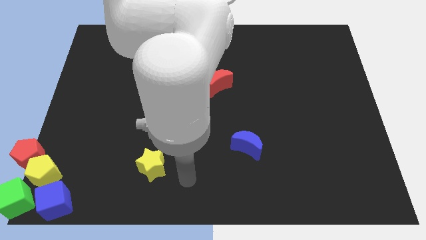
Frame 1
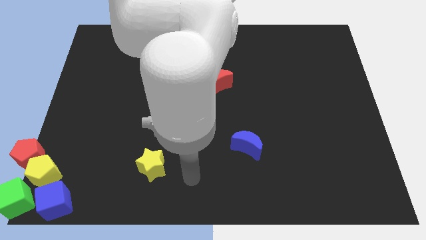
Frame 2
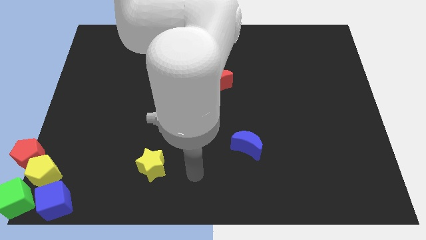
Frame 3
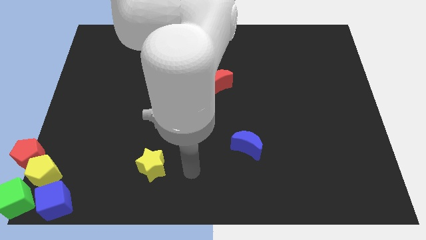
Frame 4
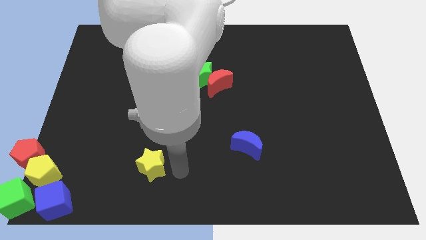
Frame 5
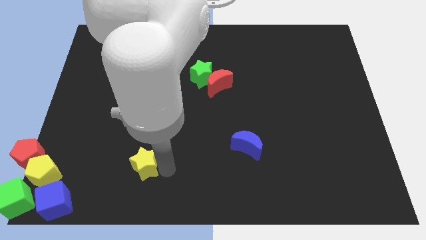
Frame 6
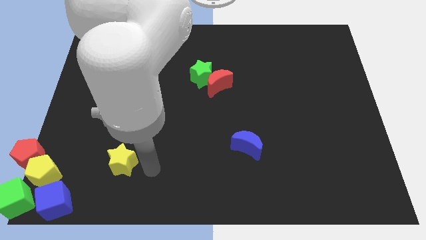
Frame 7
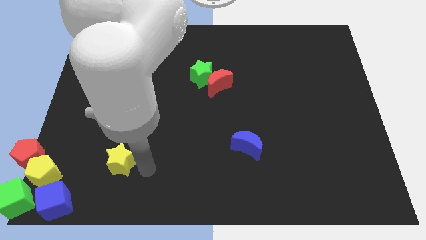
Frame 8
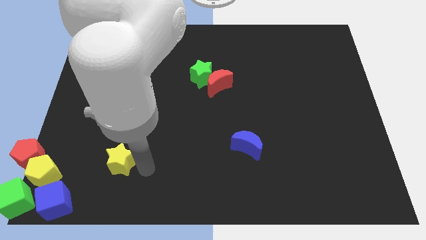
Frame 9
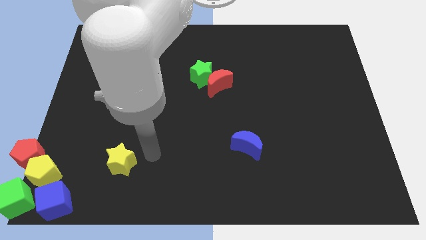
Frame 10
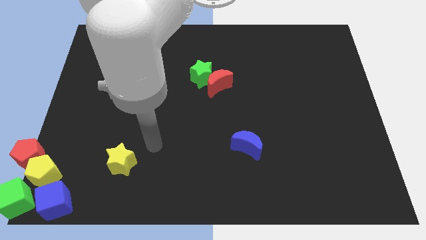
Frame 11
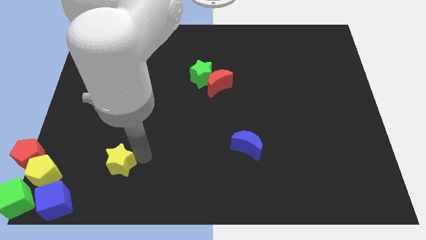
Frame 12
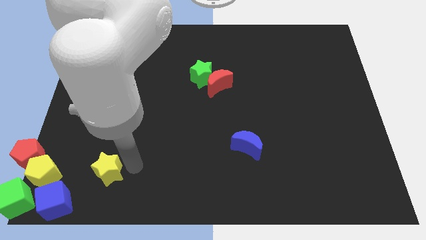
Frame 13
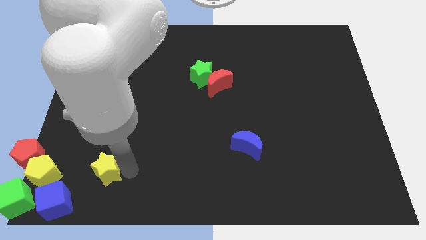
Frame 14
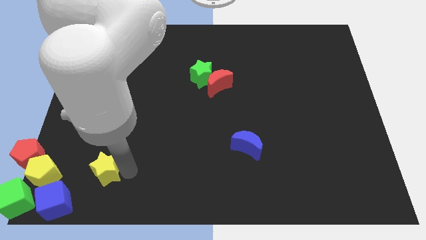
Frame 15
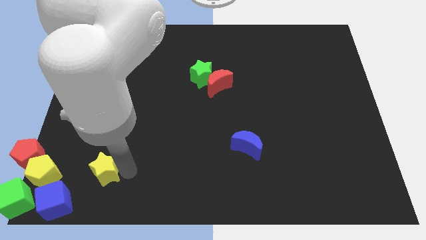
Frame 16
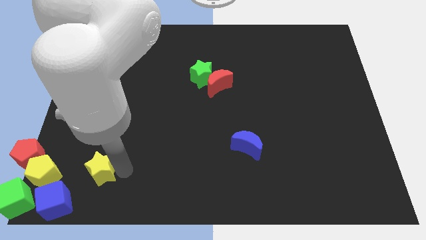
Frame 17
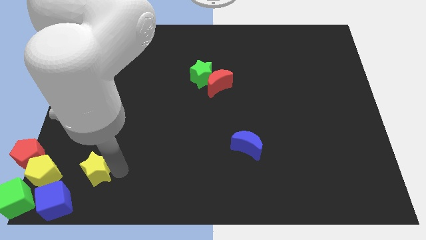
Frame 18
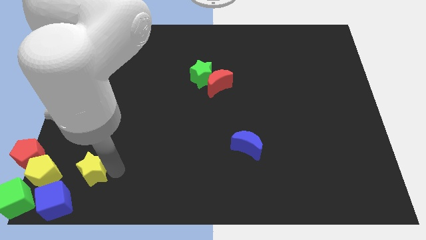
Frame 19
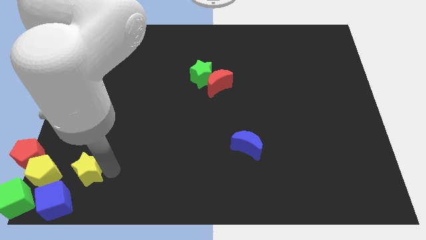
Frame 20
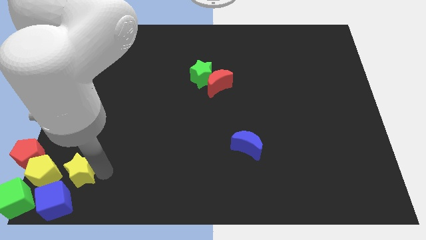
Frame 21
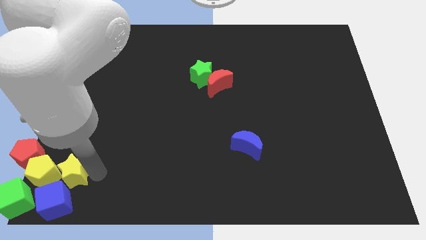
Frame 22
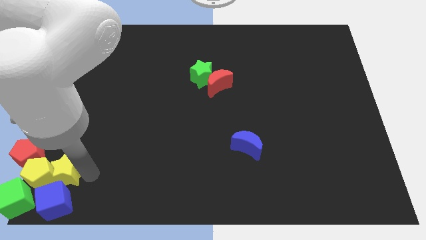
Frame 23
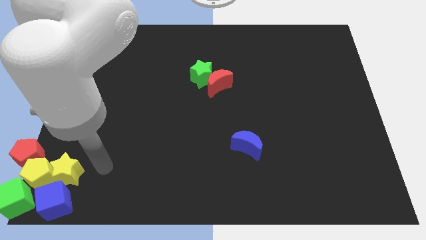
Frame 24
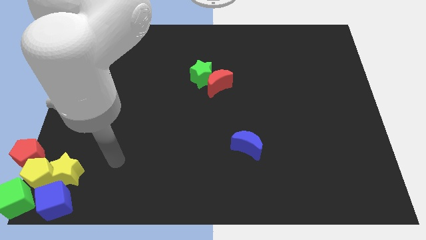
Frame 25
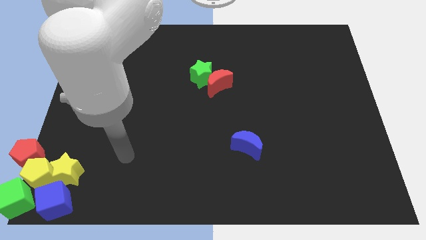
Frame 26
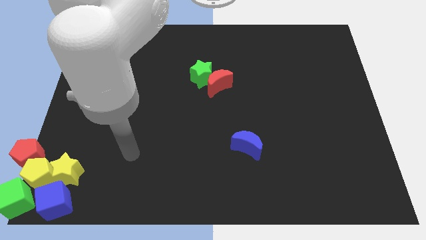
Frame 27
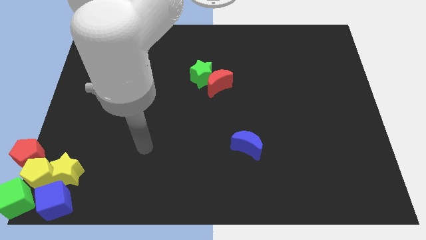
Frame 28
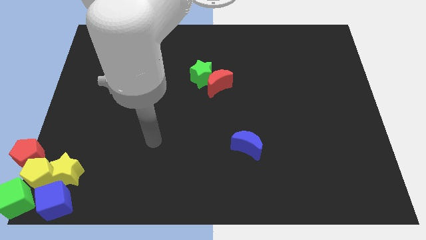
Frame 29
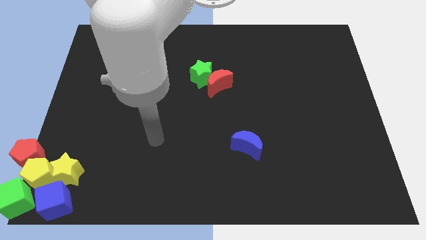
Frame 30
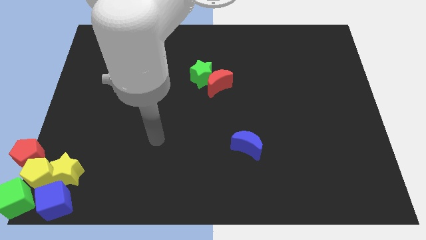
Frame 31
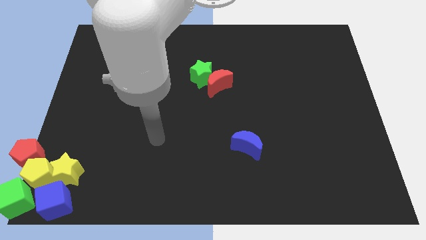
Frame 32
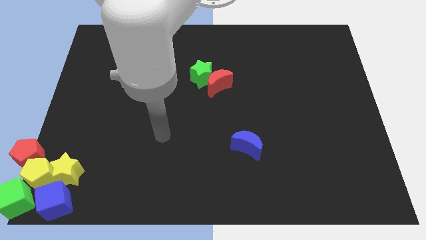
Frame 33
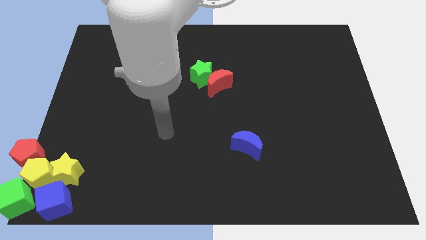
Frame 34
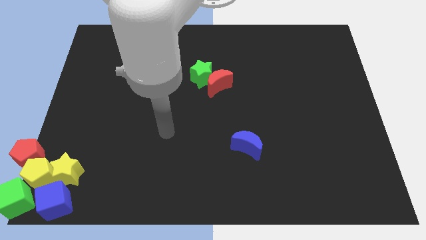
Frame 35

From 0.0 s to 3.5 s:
place the yellow star above the blue cube

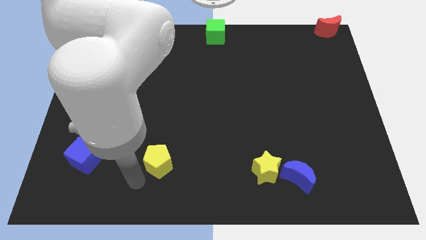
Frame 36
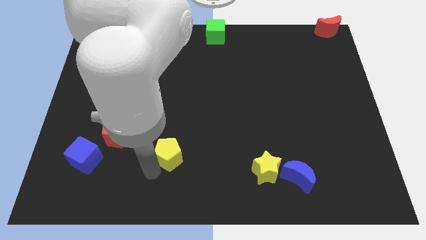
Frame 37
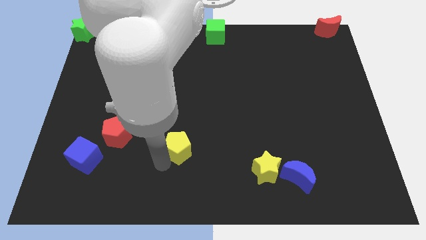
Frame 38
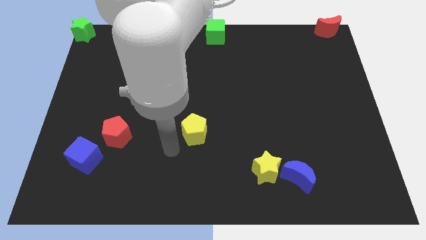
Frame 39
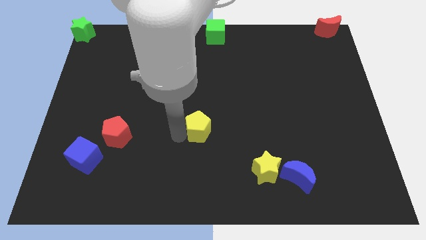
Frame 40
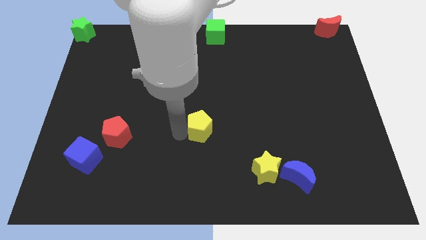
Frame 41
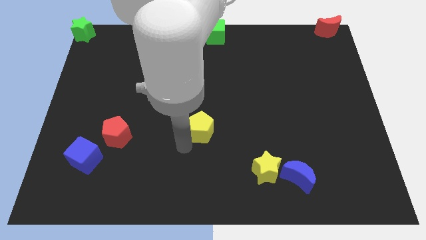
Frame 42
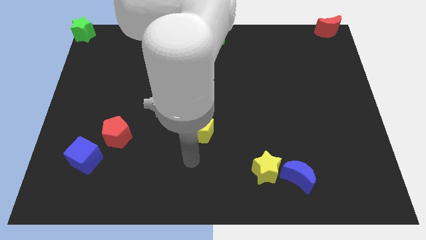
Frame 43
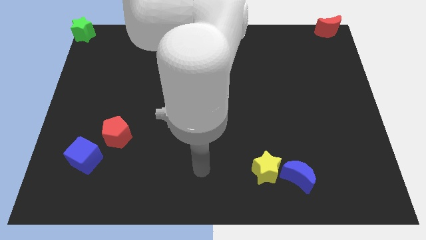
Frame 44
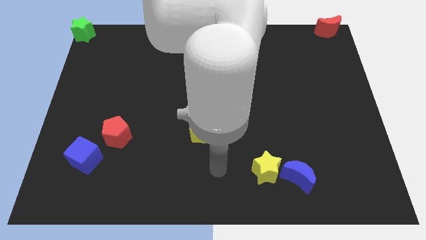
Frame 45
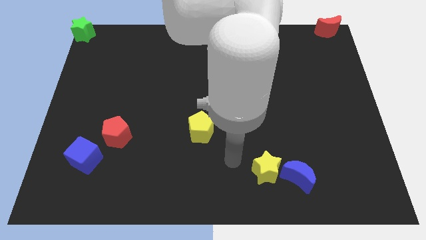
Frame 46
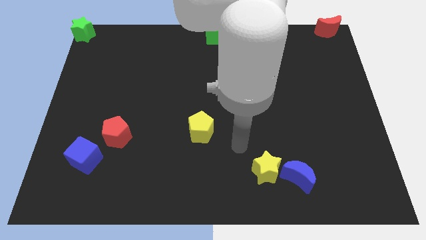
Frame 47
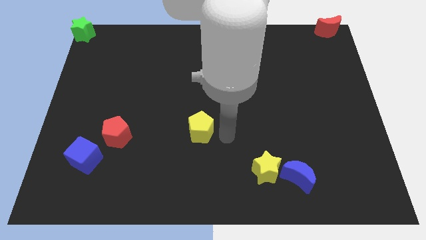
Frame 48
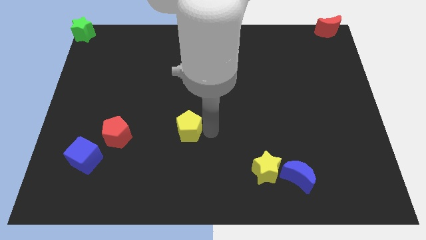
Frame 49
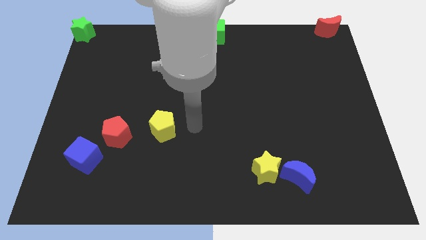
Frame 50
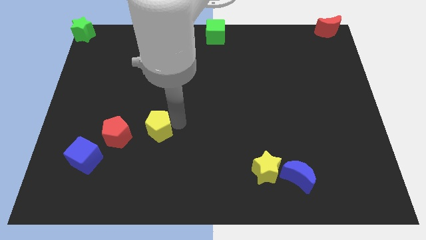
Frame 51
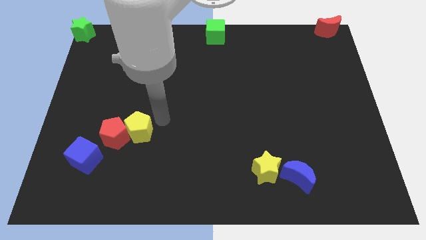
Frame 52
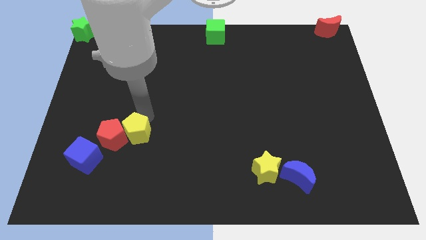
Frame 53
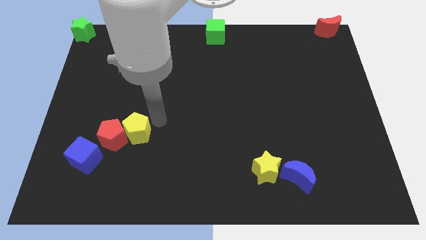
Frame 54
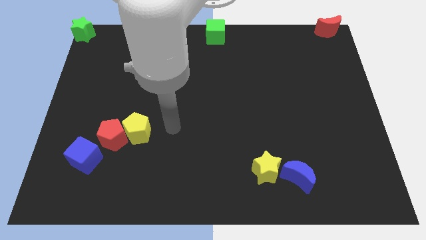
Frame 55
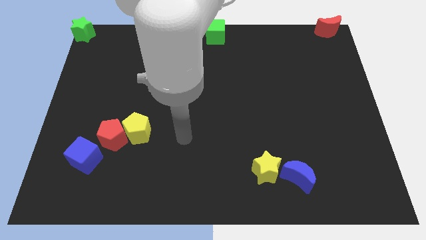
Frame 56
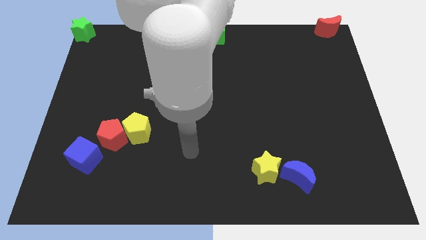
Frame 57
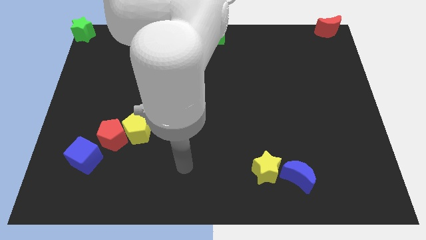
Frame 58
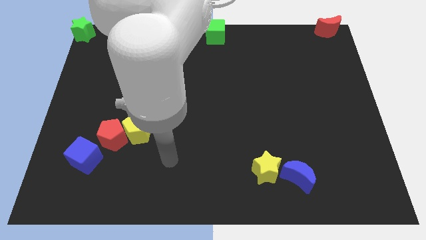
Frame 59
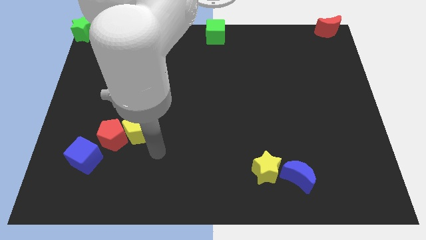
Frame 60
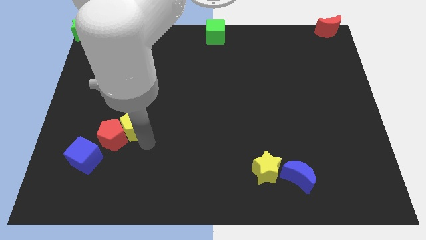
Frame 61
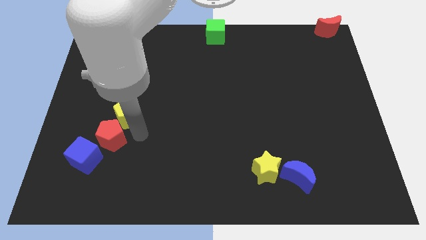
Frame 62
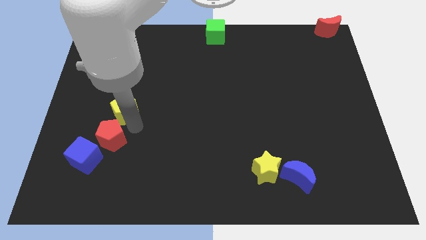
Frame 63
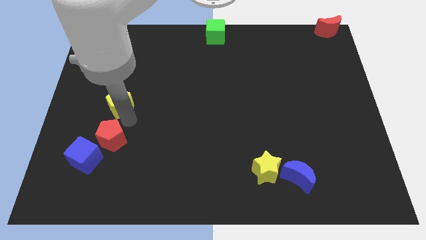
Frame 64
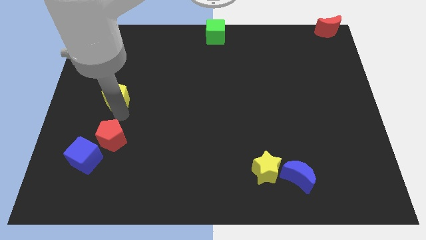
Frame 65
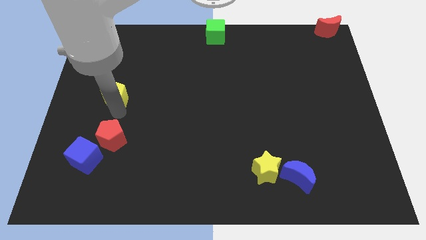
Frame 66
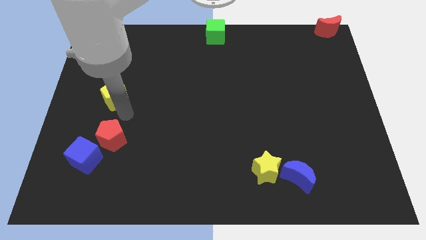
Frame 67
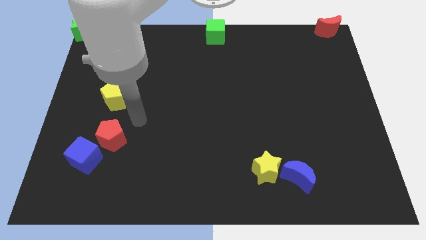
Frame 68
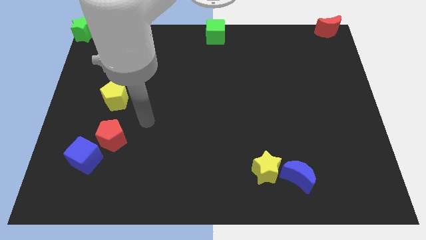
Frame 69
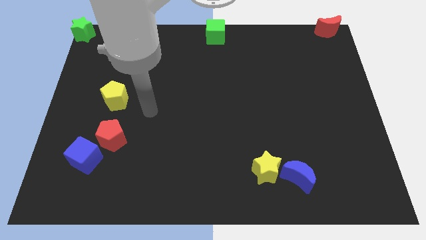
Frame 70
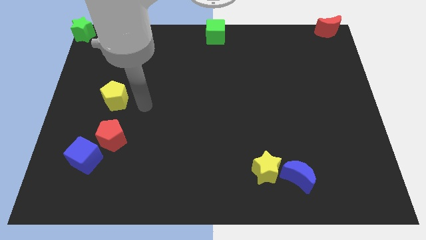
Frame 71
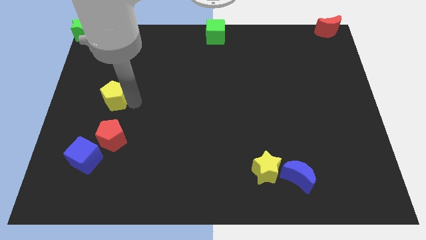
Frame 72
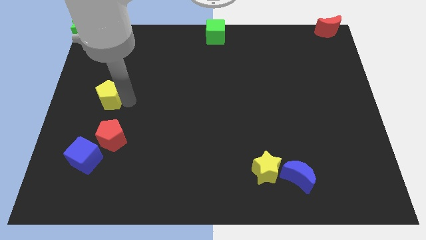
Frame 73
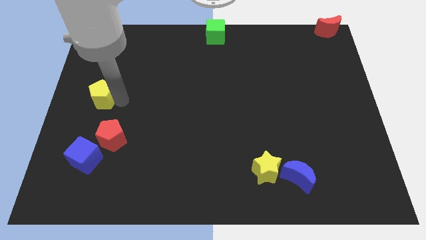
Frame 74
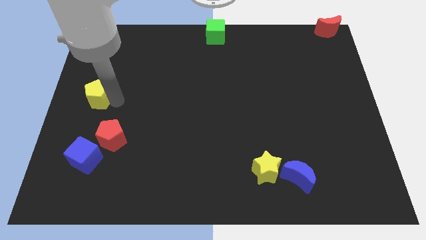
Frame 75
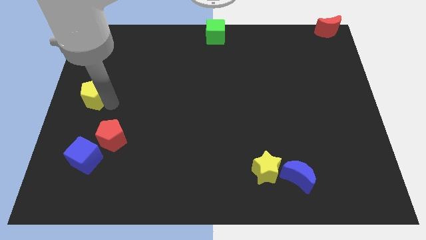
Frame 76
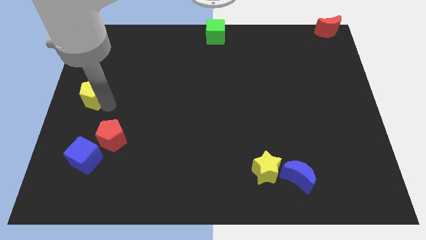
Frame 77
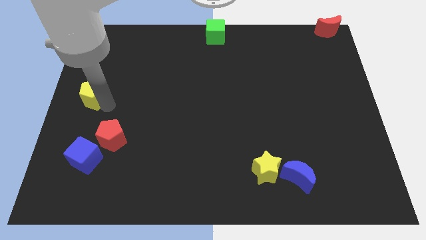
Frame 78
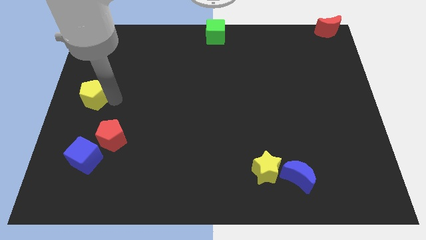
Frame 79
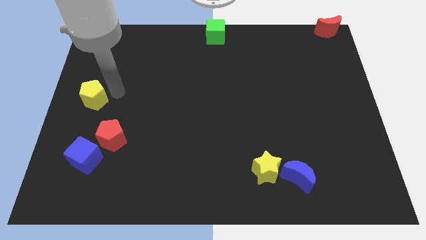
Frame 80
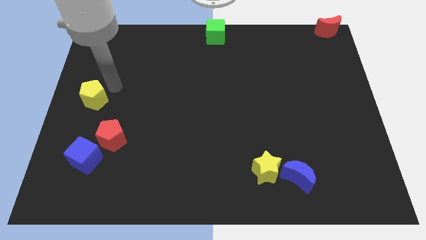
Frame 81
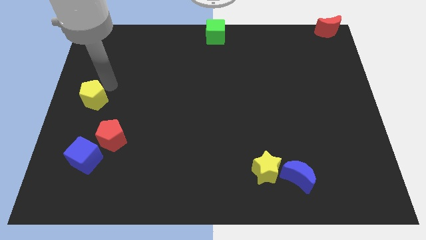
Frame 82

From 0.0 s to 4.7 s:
move yellow pentagon to the top of blue cube

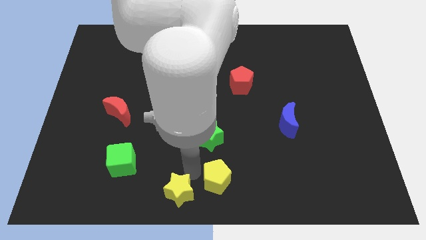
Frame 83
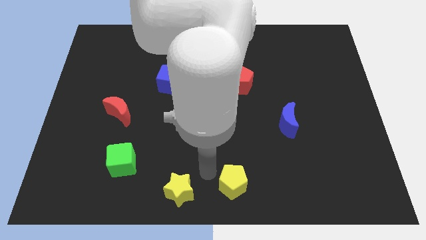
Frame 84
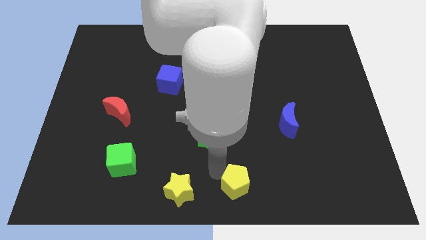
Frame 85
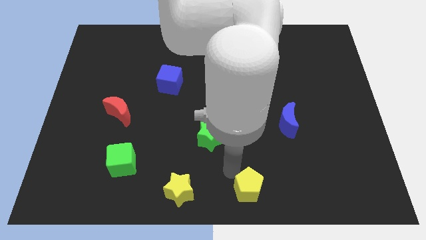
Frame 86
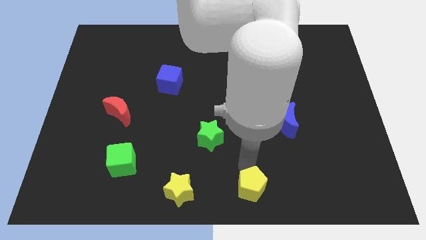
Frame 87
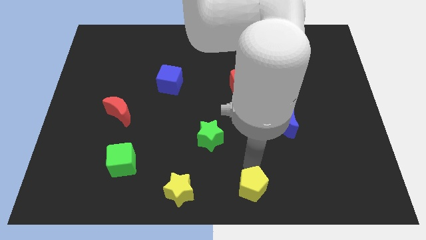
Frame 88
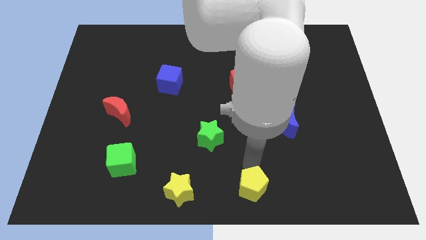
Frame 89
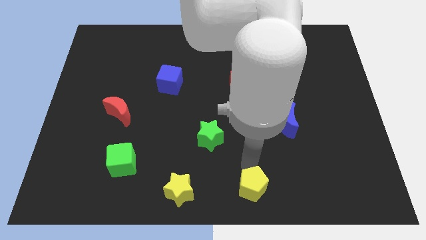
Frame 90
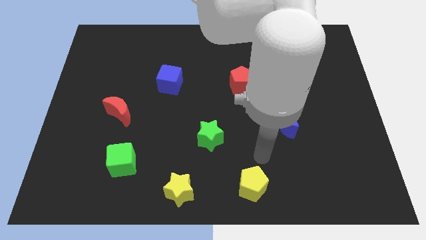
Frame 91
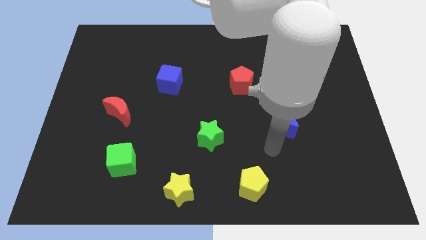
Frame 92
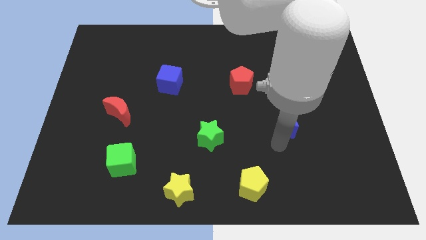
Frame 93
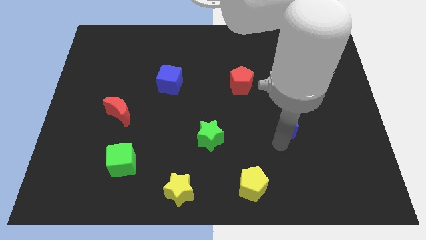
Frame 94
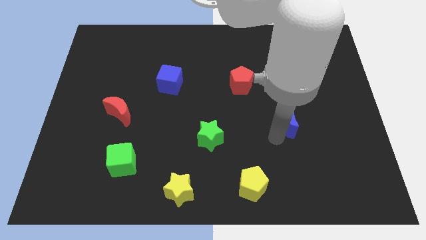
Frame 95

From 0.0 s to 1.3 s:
move the yellow pentagon vertically below the red pentagon
